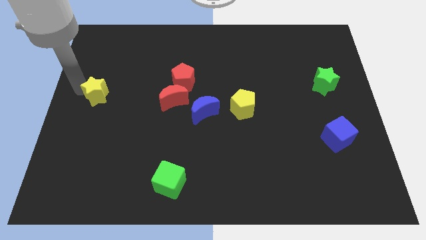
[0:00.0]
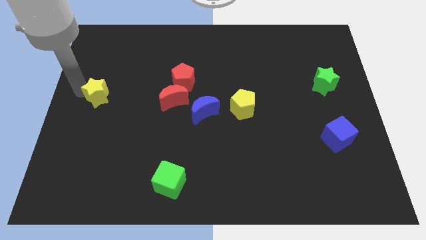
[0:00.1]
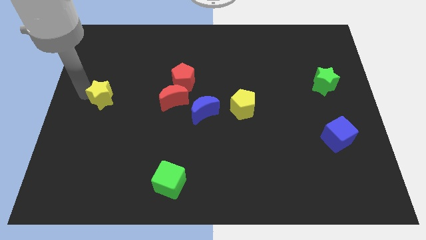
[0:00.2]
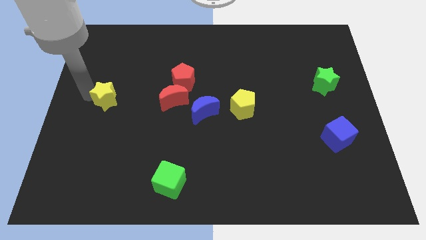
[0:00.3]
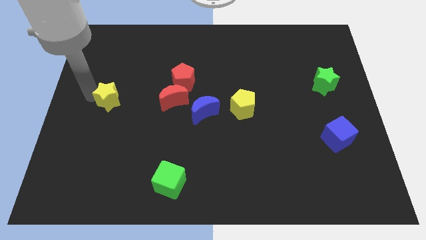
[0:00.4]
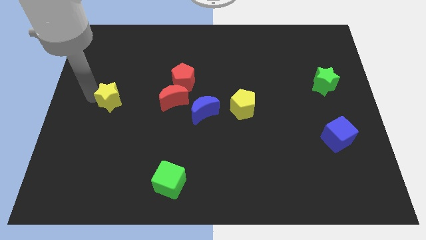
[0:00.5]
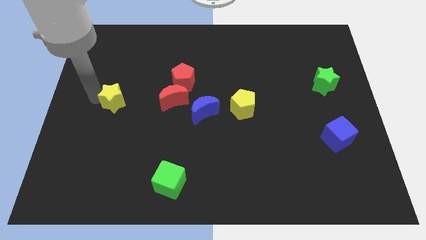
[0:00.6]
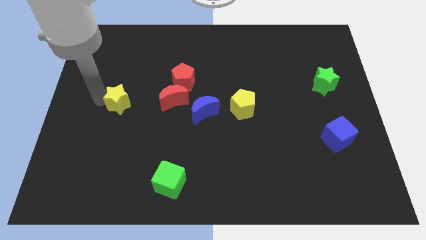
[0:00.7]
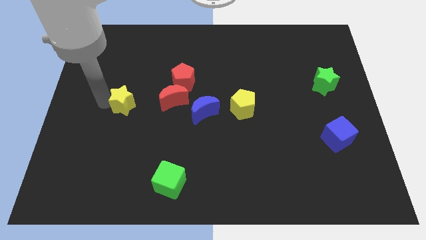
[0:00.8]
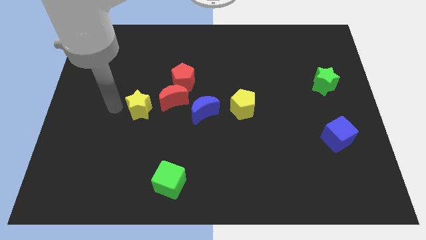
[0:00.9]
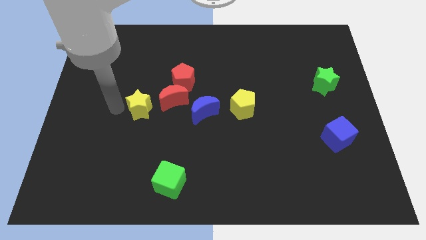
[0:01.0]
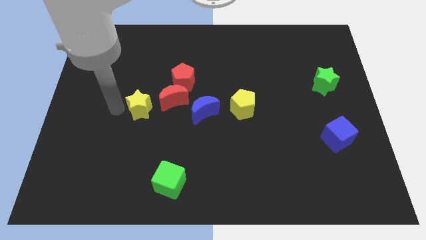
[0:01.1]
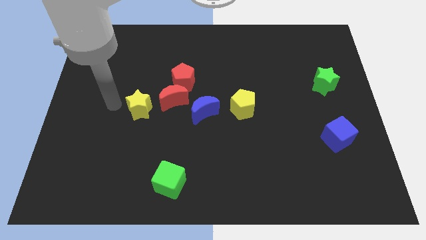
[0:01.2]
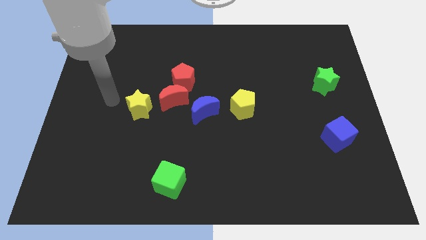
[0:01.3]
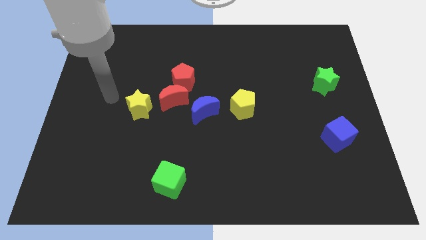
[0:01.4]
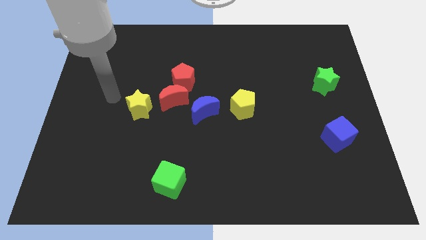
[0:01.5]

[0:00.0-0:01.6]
move yellow star near to the red moon

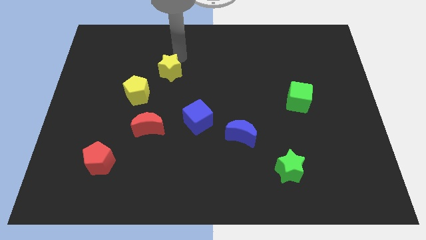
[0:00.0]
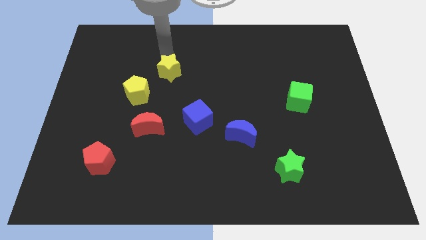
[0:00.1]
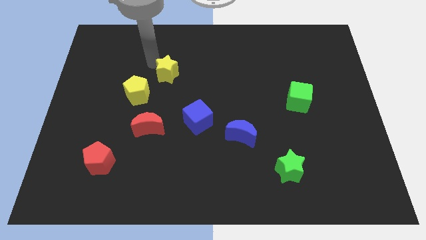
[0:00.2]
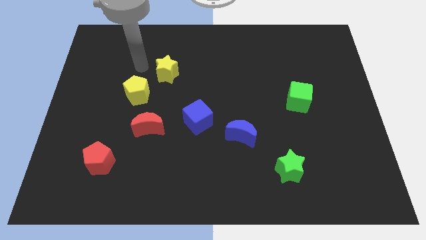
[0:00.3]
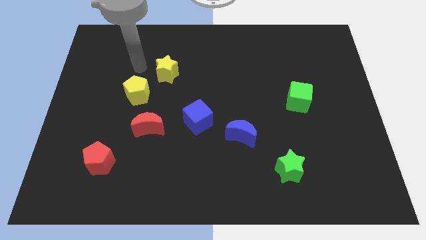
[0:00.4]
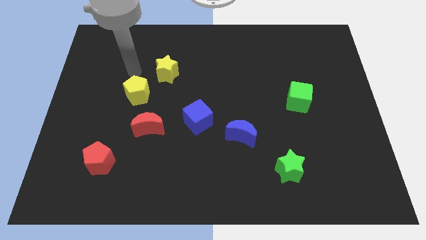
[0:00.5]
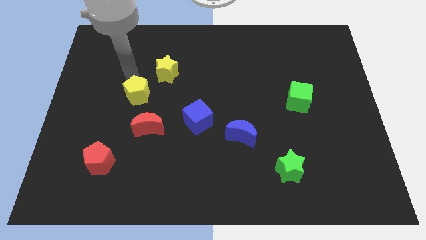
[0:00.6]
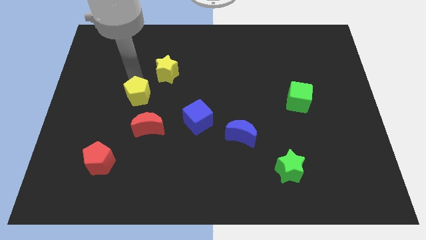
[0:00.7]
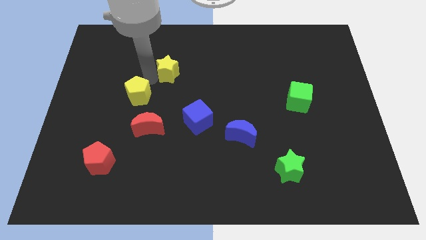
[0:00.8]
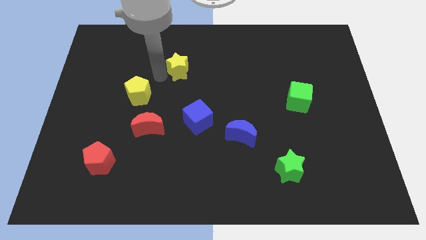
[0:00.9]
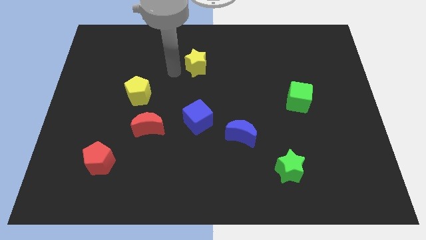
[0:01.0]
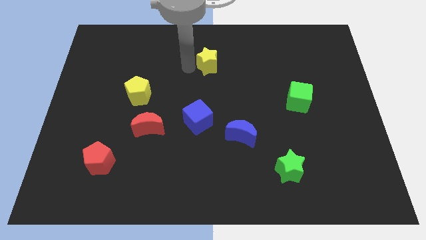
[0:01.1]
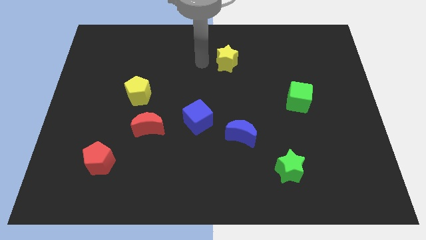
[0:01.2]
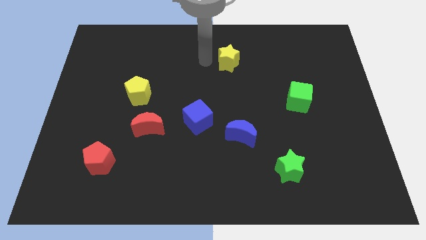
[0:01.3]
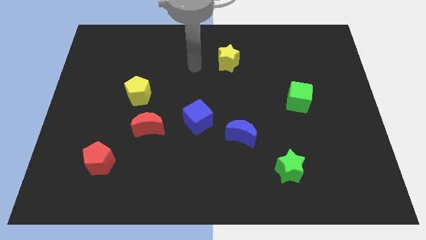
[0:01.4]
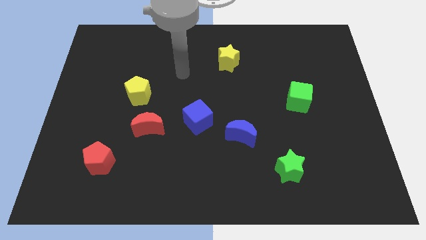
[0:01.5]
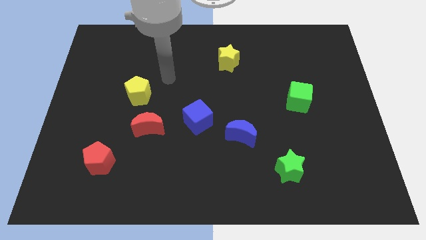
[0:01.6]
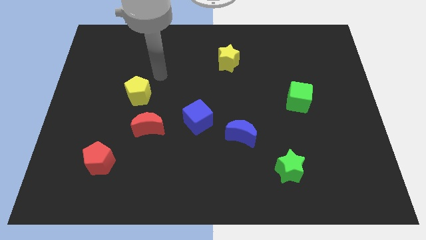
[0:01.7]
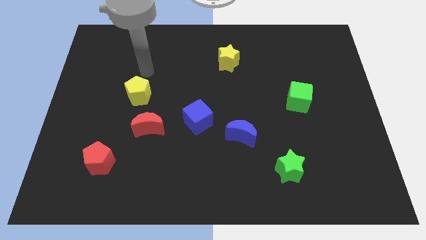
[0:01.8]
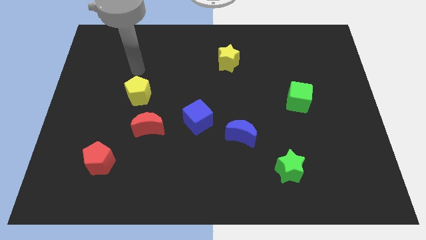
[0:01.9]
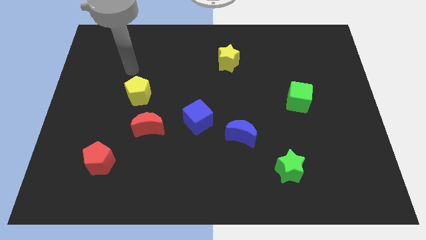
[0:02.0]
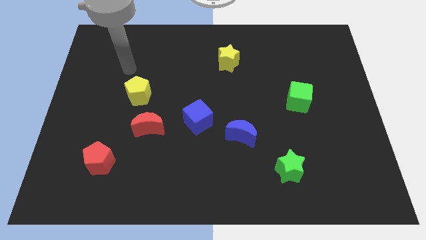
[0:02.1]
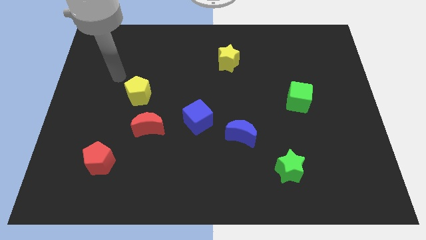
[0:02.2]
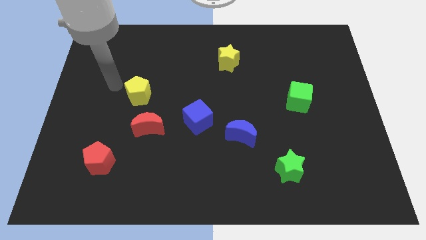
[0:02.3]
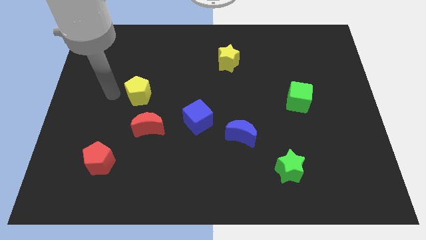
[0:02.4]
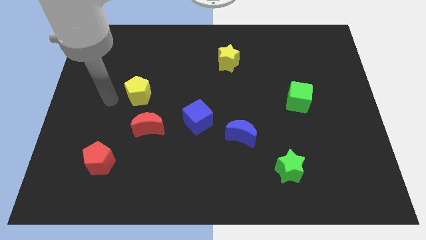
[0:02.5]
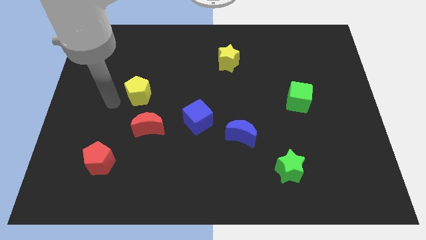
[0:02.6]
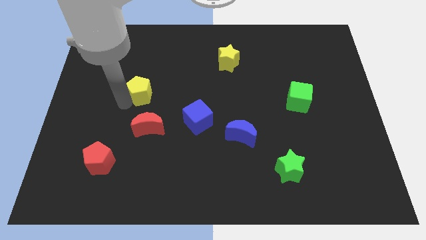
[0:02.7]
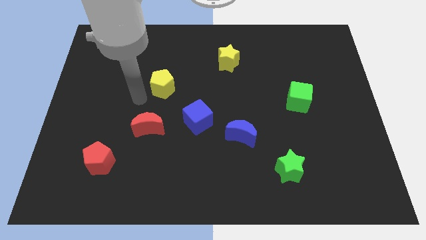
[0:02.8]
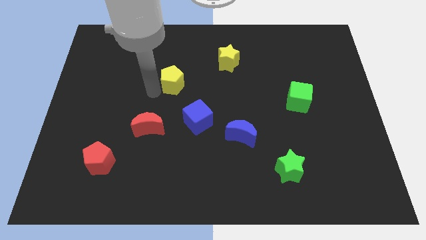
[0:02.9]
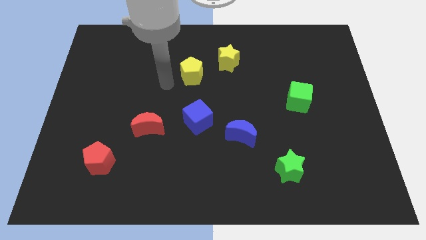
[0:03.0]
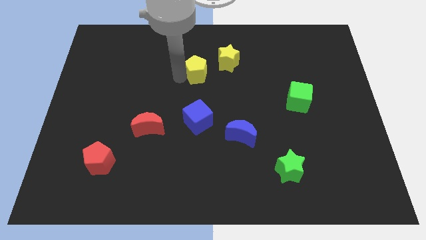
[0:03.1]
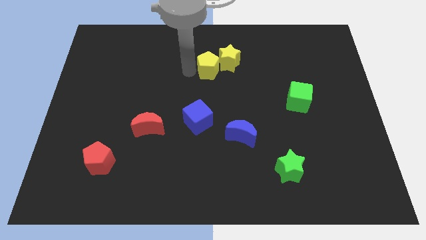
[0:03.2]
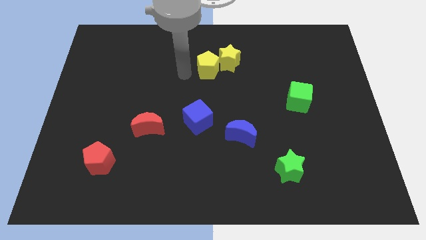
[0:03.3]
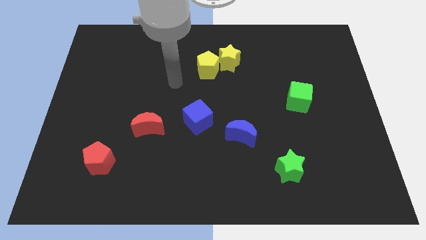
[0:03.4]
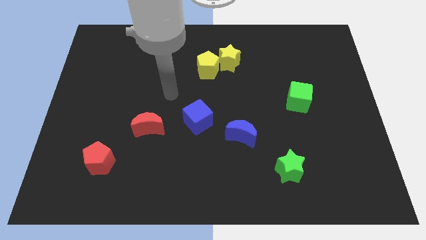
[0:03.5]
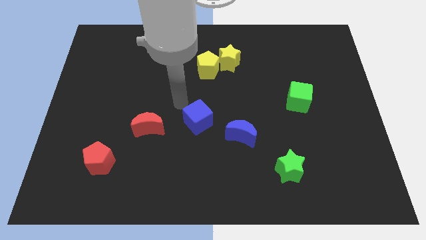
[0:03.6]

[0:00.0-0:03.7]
place both the yellow blocks diagonally on the top right side of the blue cube

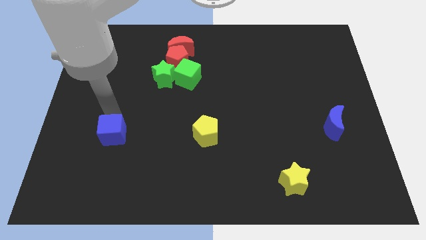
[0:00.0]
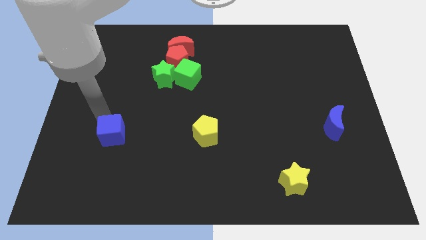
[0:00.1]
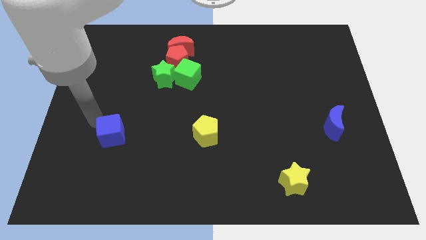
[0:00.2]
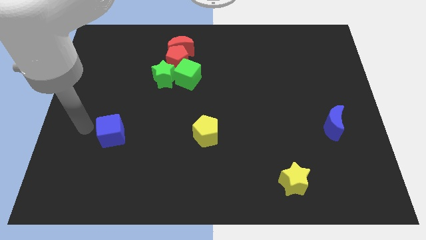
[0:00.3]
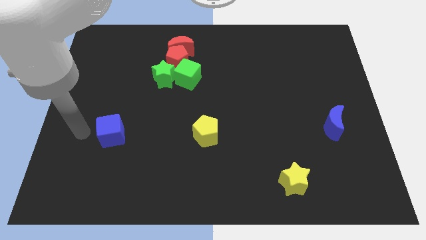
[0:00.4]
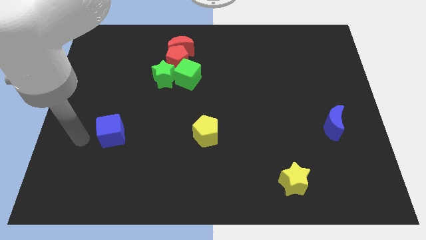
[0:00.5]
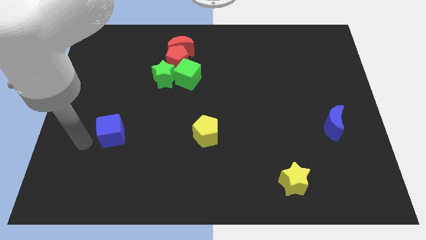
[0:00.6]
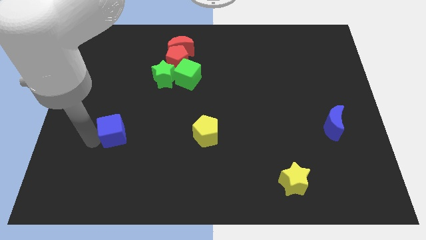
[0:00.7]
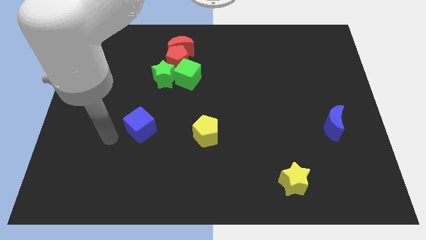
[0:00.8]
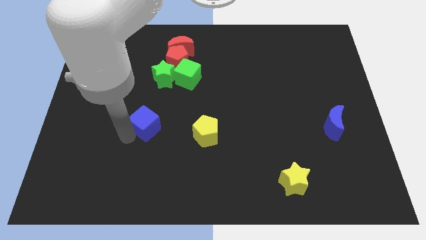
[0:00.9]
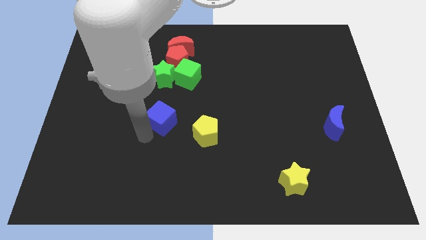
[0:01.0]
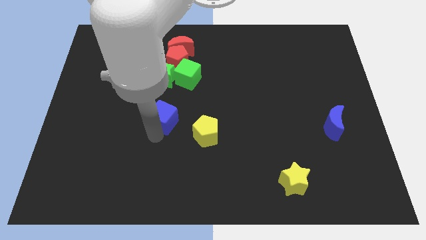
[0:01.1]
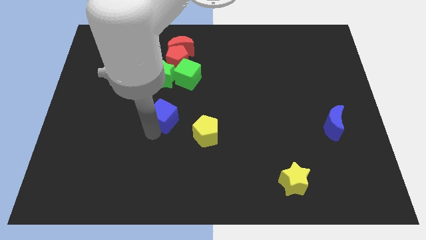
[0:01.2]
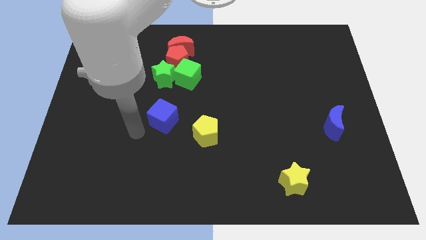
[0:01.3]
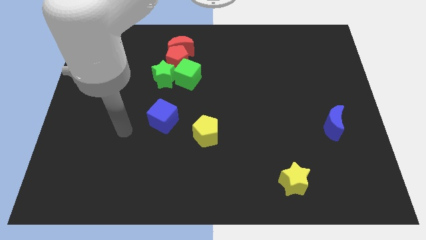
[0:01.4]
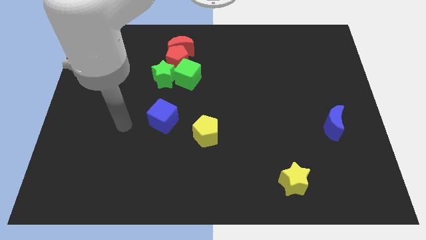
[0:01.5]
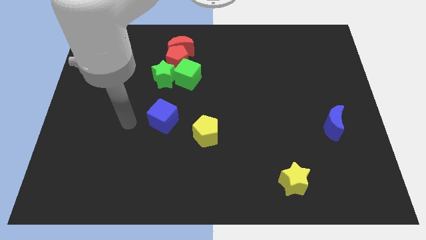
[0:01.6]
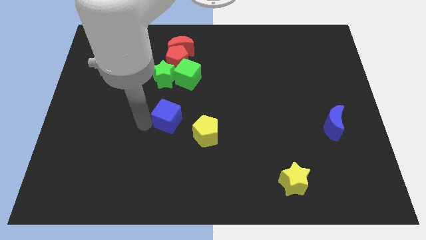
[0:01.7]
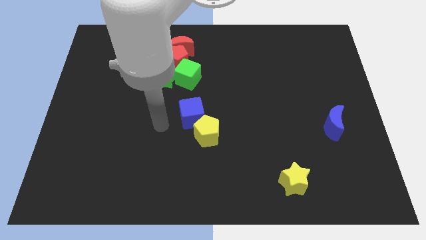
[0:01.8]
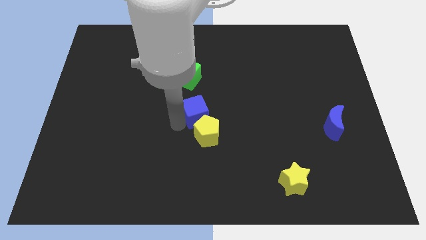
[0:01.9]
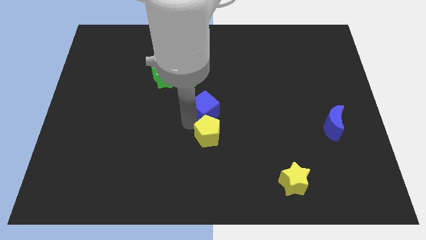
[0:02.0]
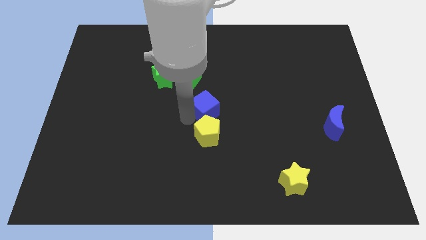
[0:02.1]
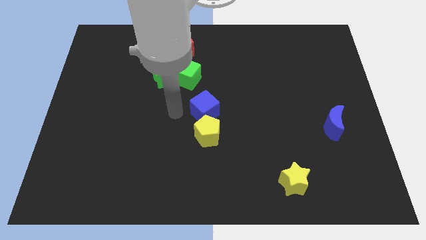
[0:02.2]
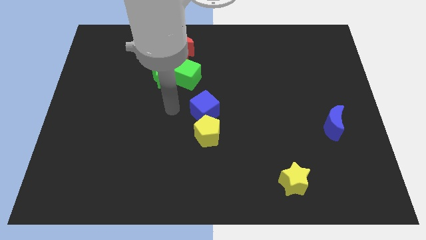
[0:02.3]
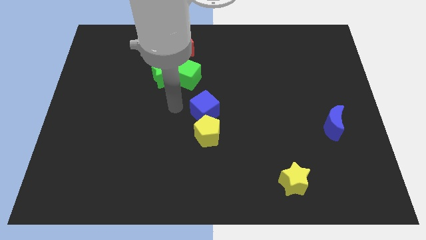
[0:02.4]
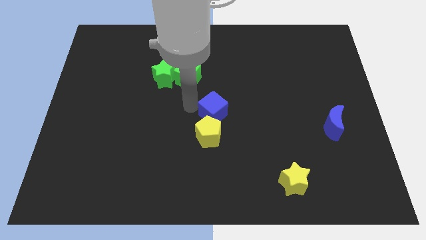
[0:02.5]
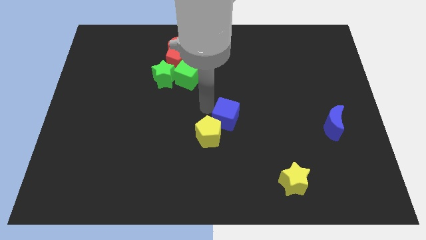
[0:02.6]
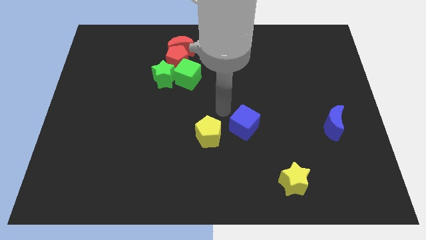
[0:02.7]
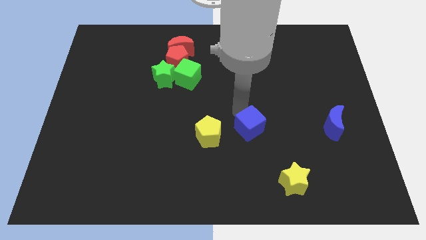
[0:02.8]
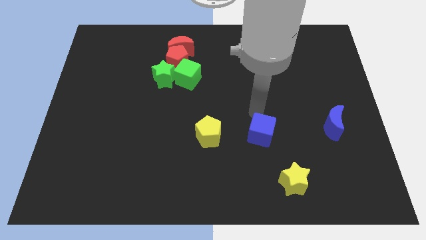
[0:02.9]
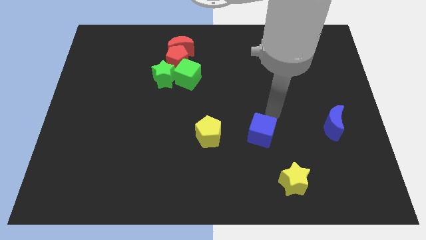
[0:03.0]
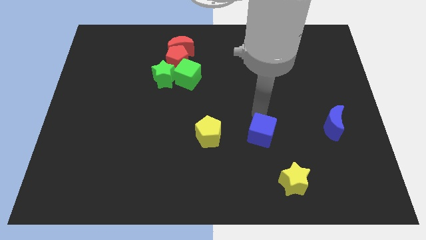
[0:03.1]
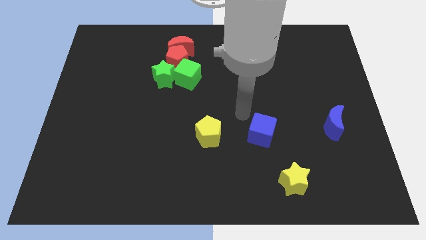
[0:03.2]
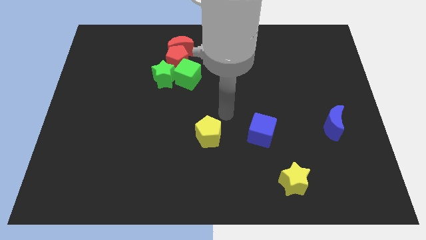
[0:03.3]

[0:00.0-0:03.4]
place blue cube between the yellow pentagon and blue moon
